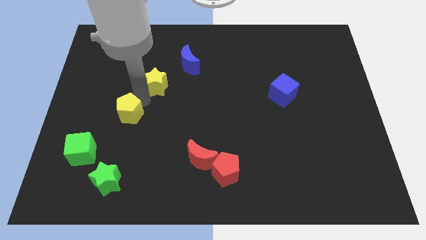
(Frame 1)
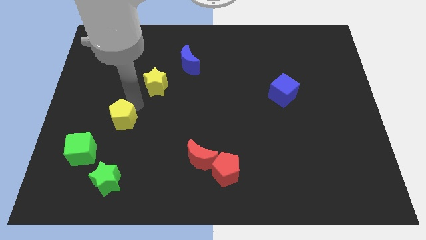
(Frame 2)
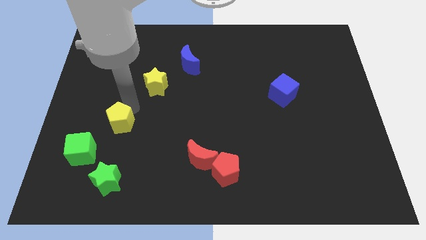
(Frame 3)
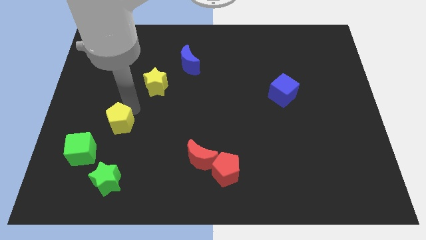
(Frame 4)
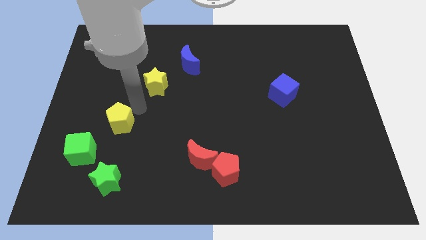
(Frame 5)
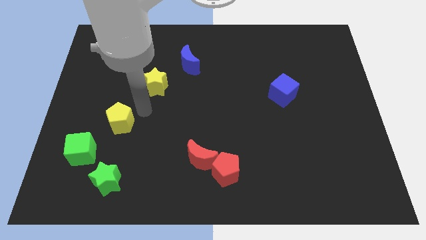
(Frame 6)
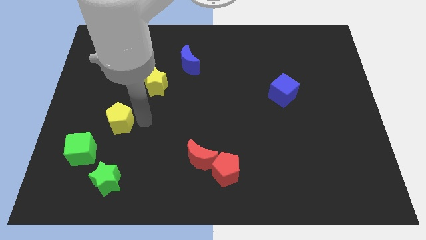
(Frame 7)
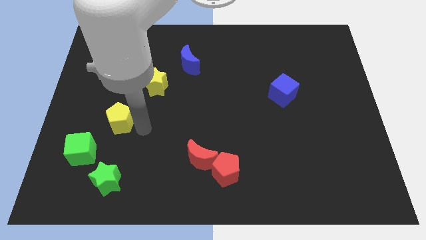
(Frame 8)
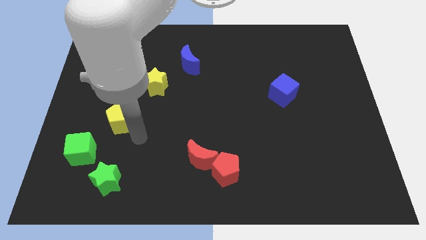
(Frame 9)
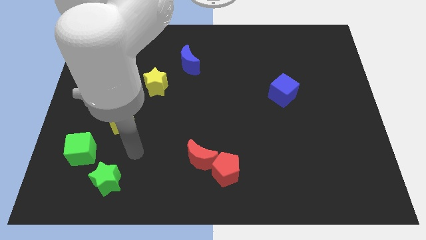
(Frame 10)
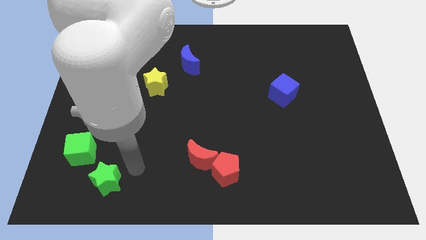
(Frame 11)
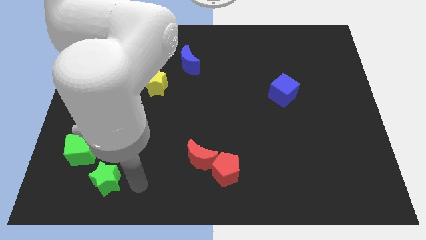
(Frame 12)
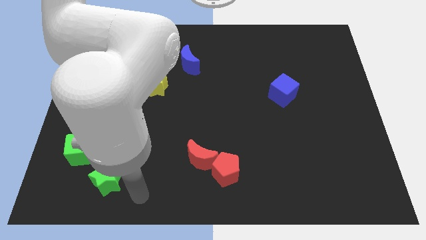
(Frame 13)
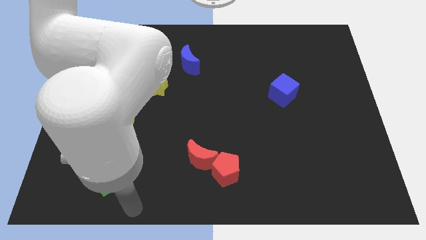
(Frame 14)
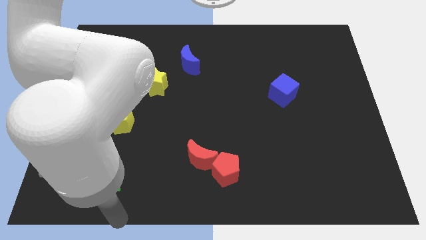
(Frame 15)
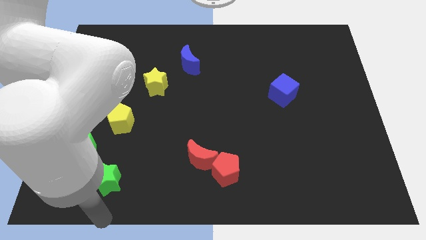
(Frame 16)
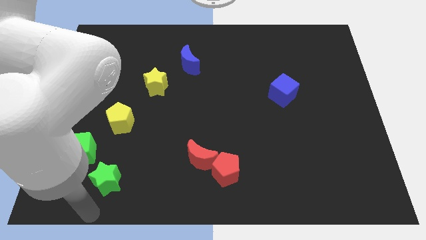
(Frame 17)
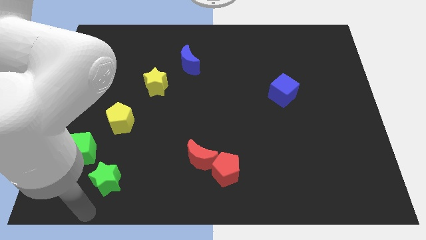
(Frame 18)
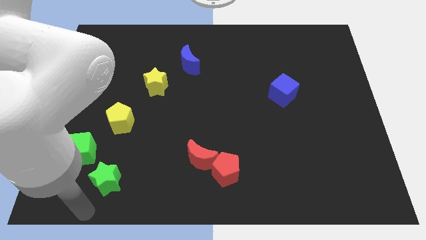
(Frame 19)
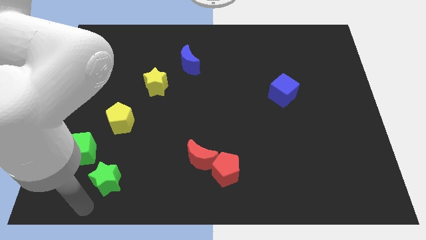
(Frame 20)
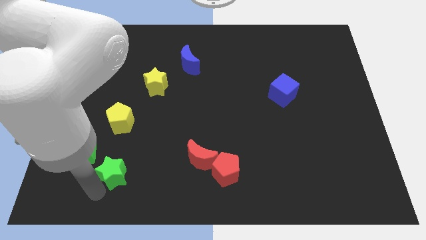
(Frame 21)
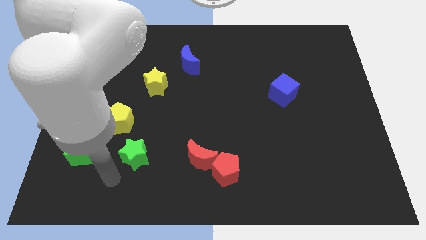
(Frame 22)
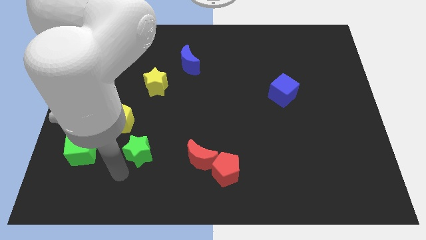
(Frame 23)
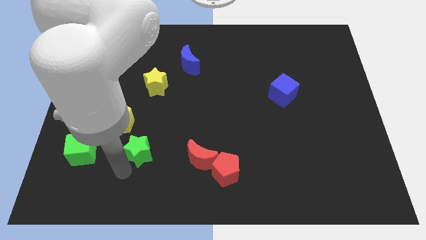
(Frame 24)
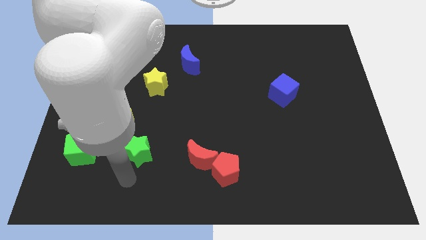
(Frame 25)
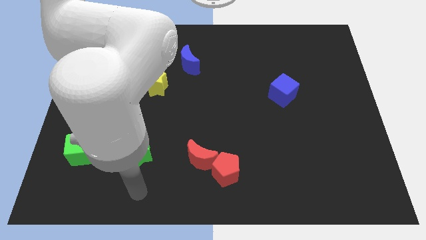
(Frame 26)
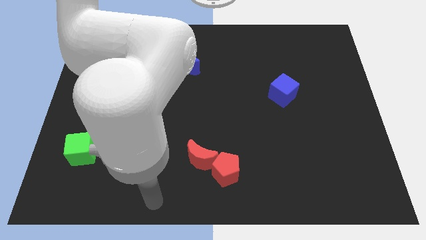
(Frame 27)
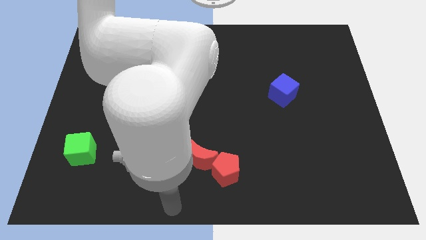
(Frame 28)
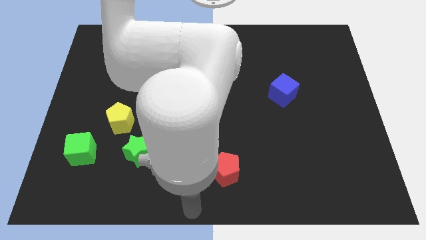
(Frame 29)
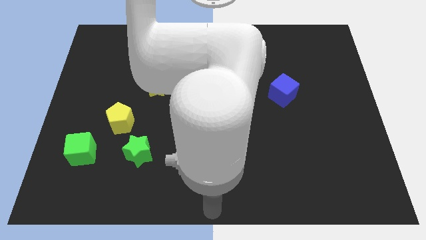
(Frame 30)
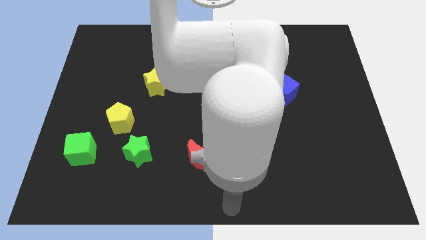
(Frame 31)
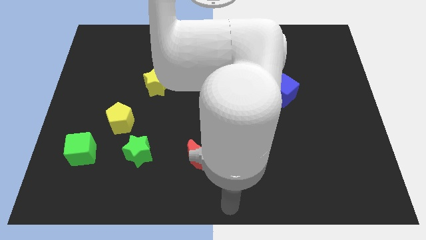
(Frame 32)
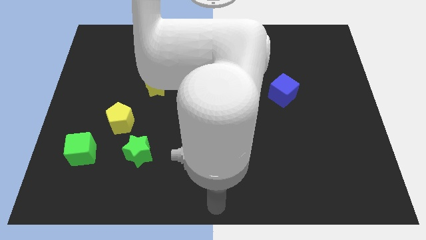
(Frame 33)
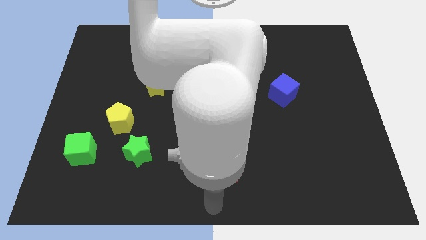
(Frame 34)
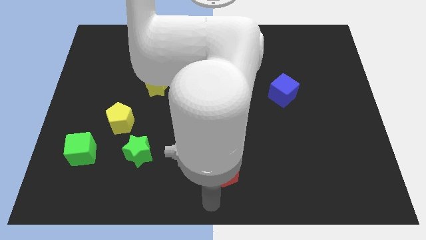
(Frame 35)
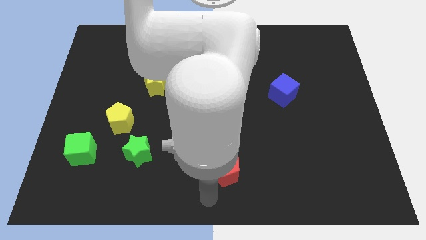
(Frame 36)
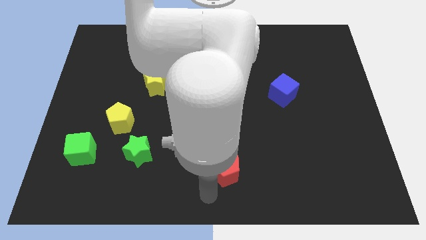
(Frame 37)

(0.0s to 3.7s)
place the green star to the left of the red moon

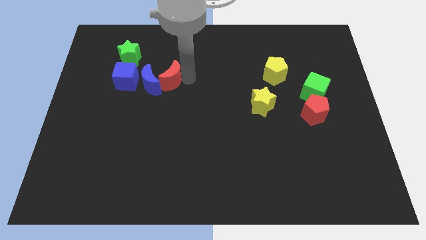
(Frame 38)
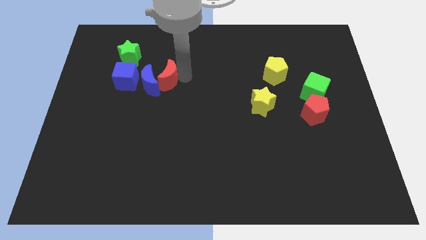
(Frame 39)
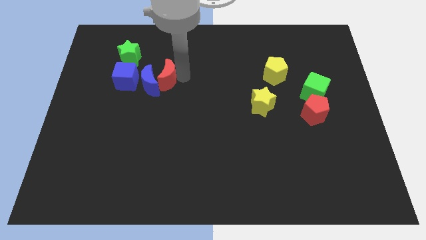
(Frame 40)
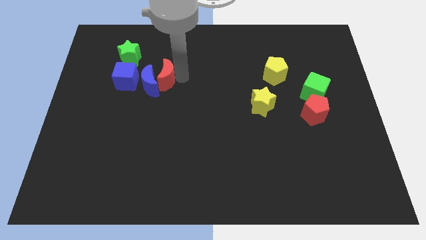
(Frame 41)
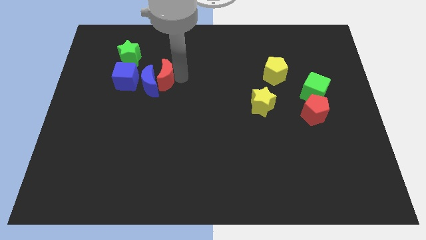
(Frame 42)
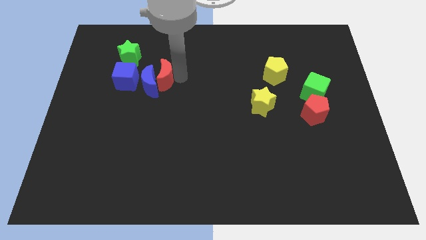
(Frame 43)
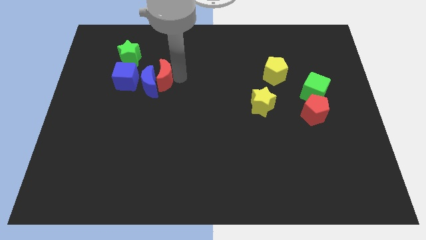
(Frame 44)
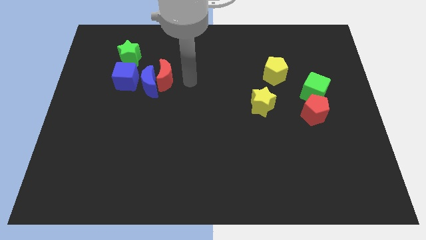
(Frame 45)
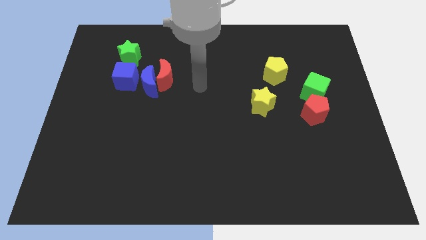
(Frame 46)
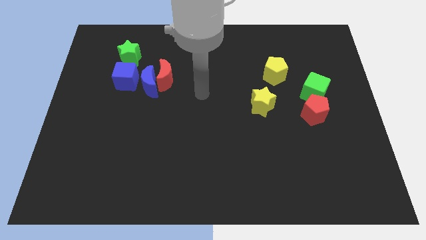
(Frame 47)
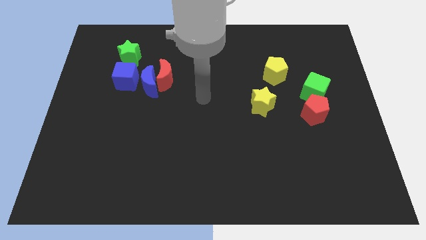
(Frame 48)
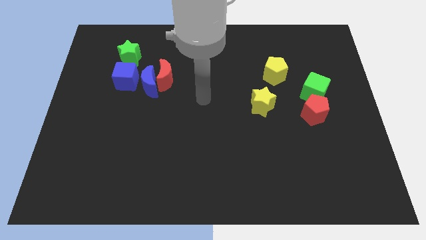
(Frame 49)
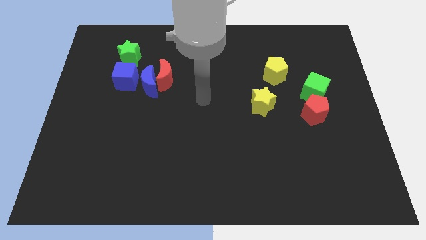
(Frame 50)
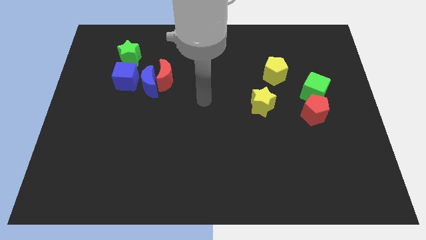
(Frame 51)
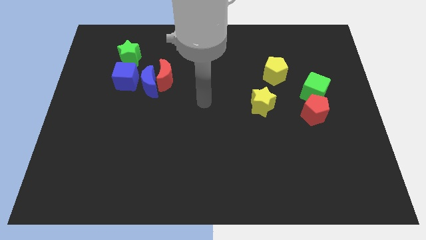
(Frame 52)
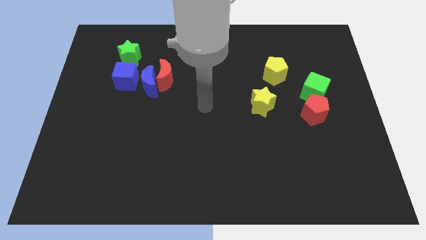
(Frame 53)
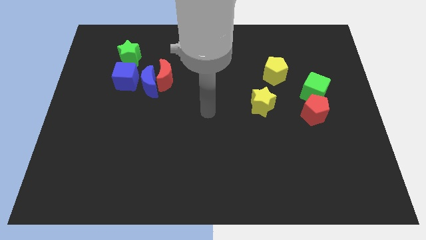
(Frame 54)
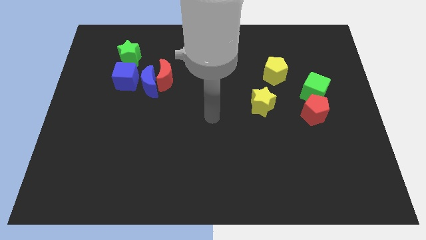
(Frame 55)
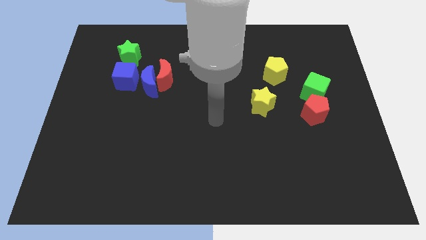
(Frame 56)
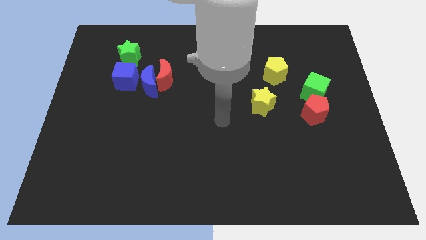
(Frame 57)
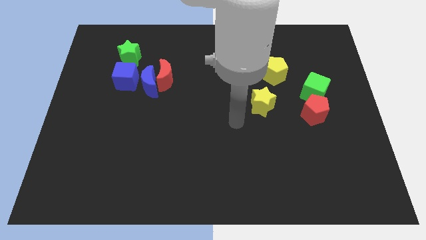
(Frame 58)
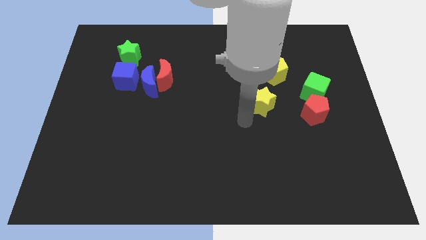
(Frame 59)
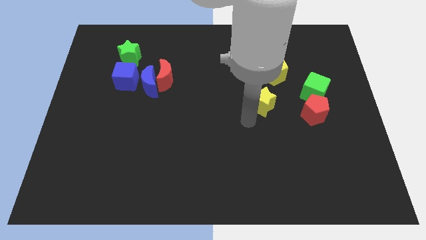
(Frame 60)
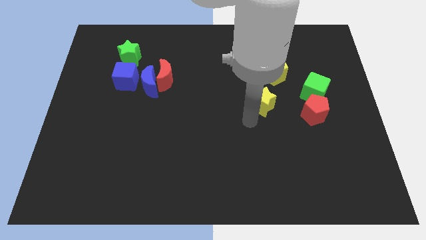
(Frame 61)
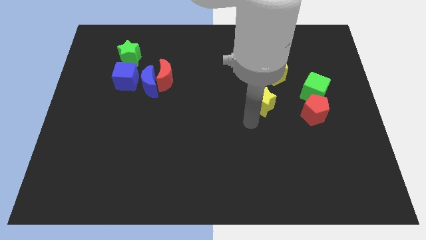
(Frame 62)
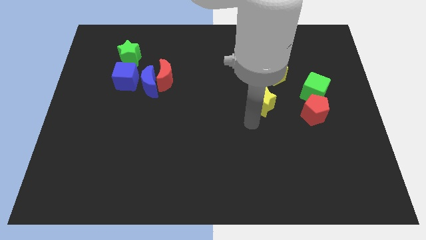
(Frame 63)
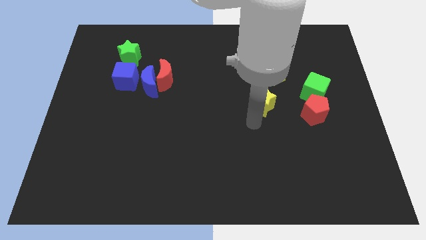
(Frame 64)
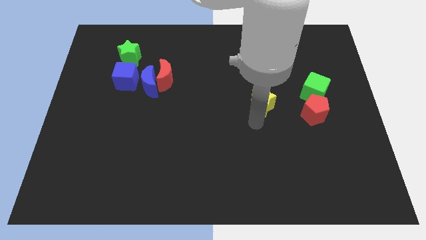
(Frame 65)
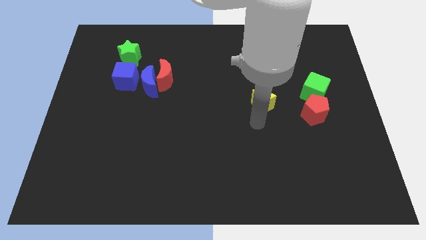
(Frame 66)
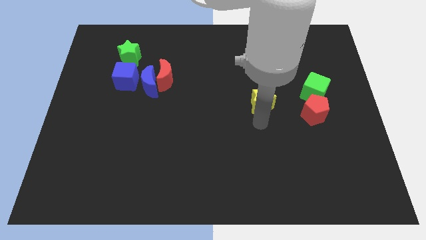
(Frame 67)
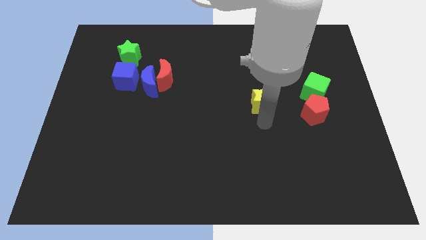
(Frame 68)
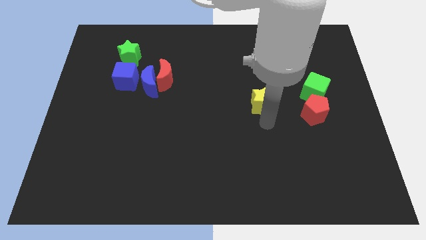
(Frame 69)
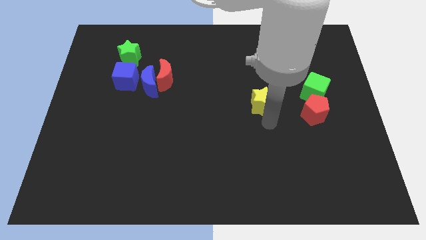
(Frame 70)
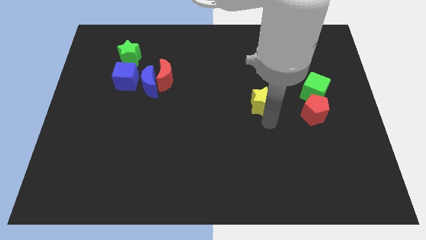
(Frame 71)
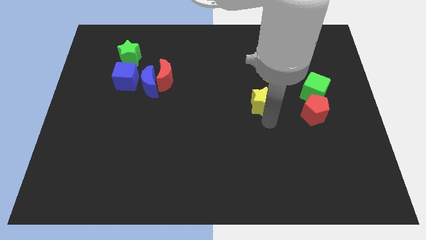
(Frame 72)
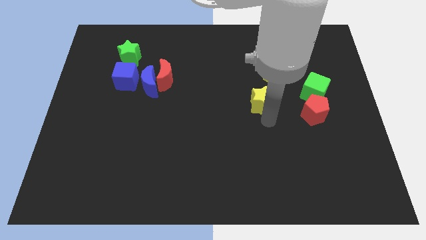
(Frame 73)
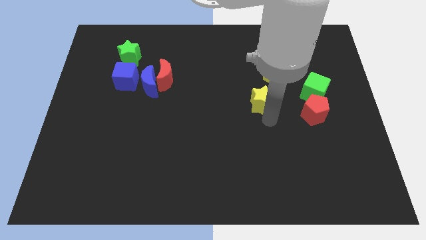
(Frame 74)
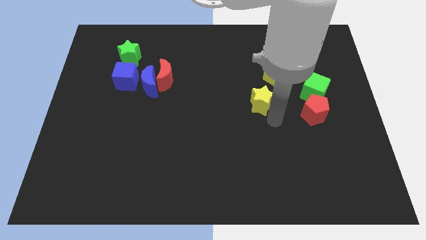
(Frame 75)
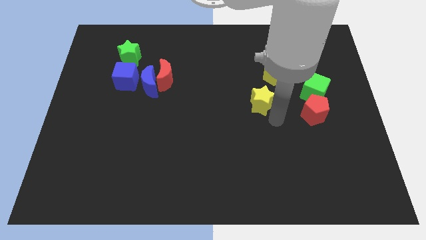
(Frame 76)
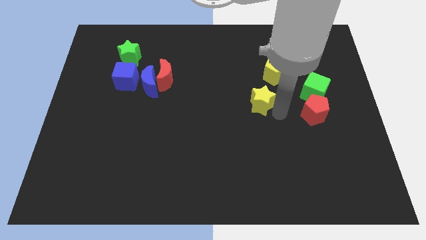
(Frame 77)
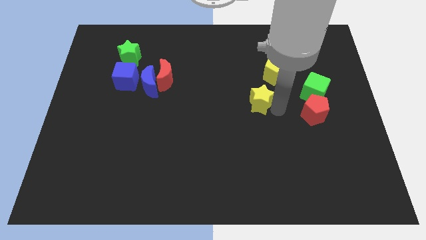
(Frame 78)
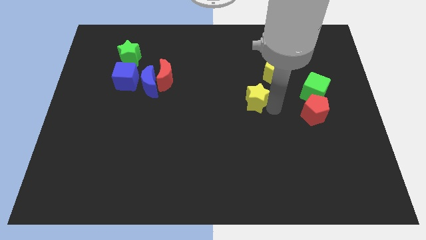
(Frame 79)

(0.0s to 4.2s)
move arm near yellow star

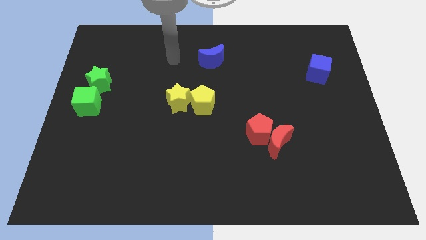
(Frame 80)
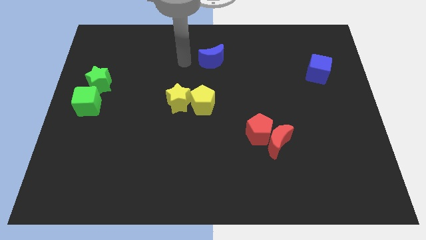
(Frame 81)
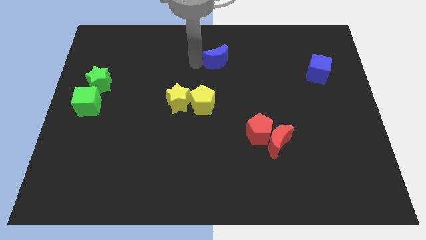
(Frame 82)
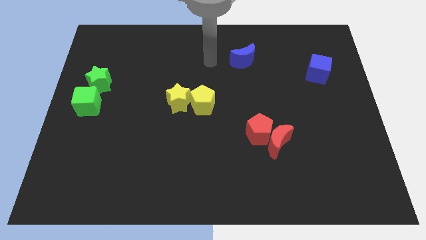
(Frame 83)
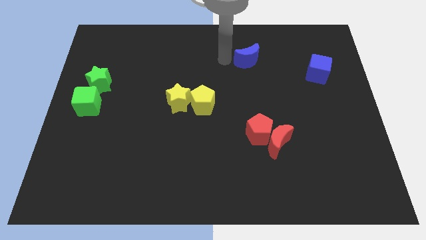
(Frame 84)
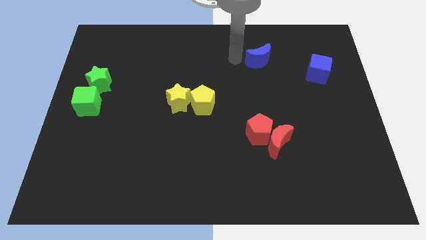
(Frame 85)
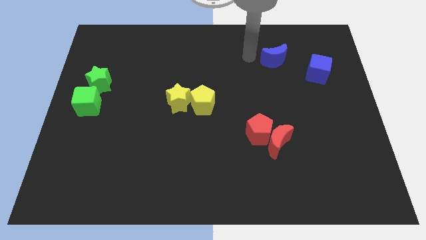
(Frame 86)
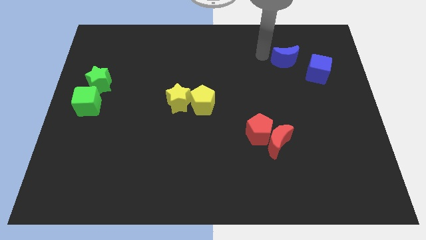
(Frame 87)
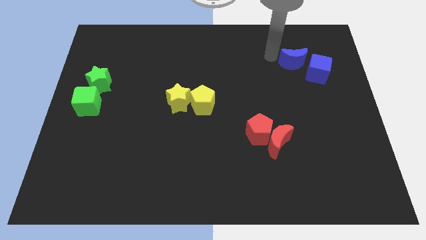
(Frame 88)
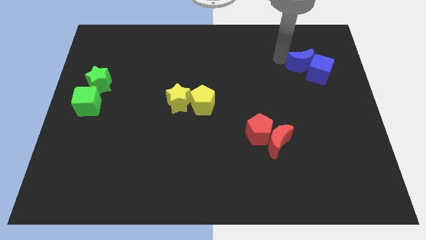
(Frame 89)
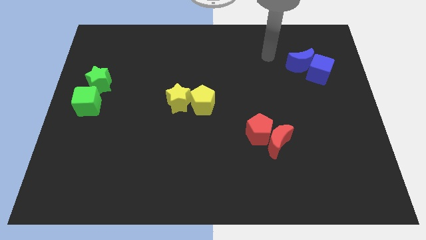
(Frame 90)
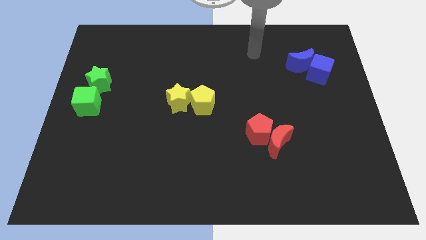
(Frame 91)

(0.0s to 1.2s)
move the blue moon into the blue cube
